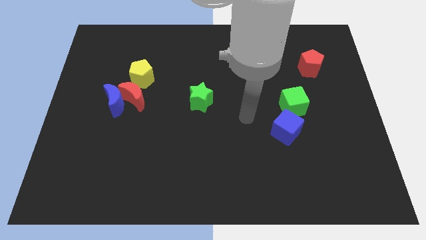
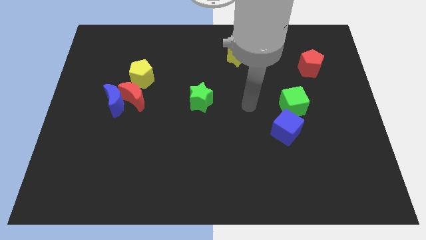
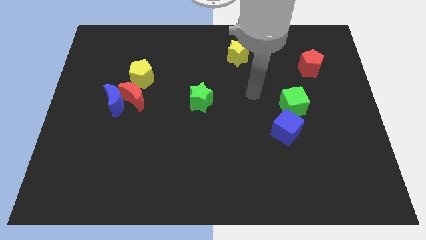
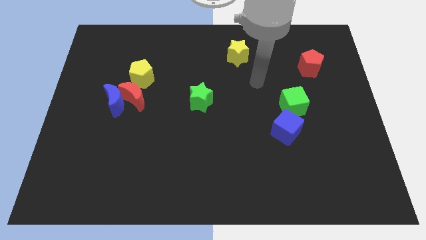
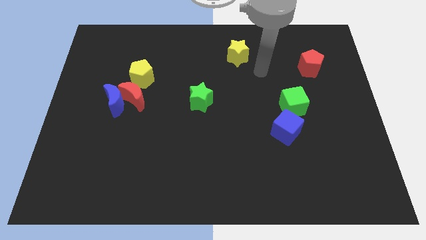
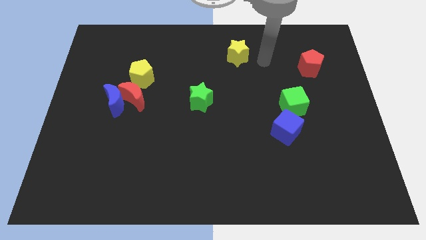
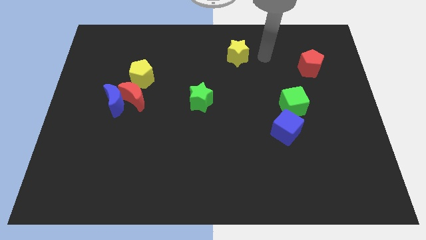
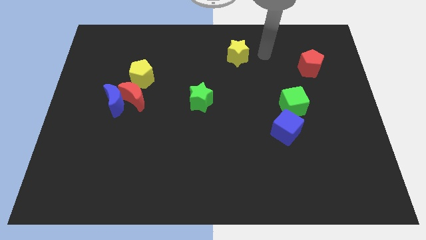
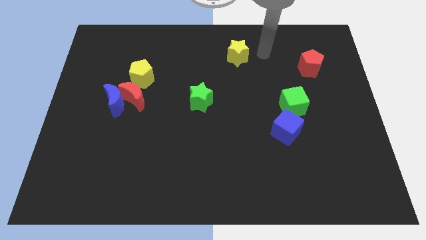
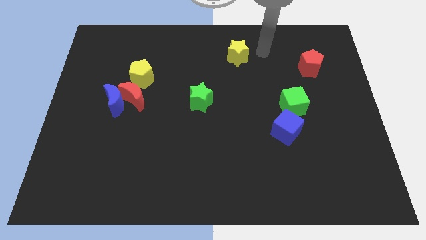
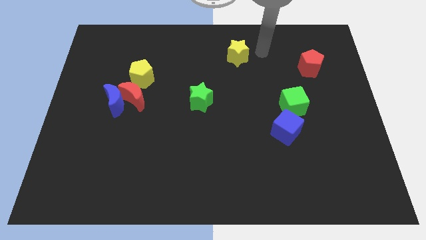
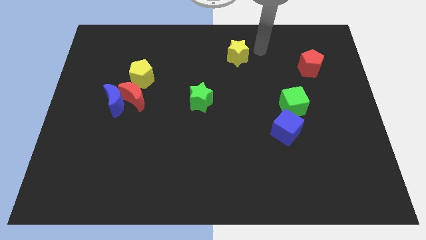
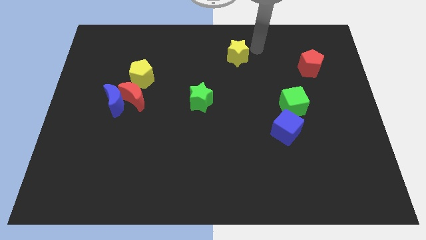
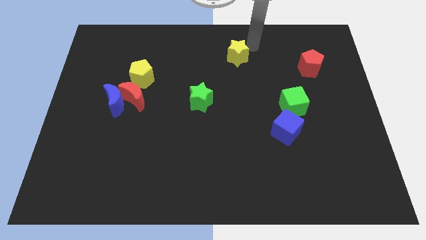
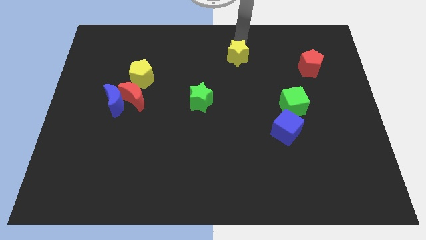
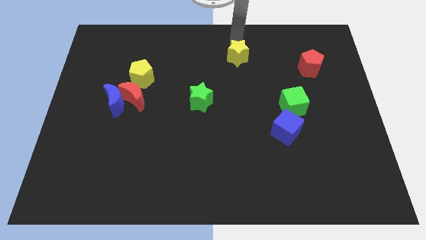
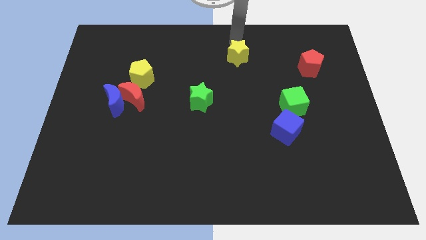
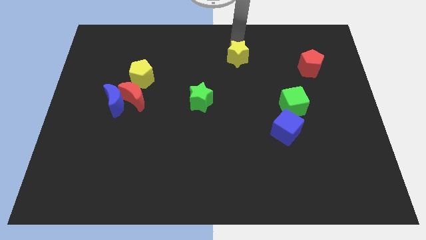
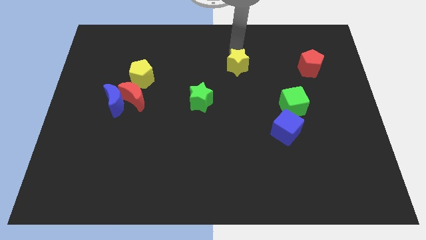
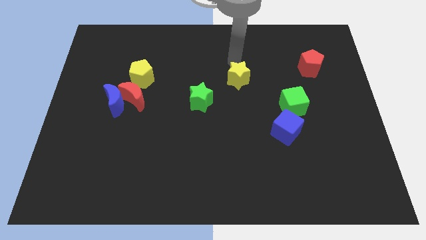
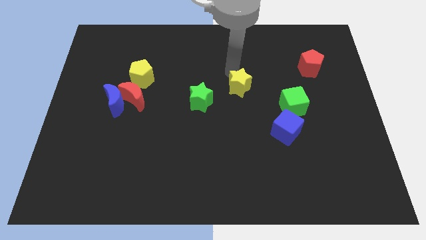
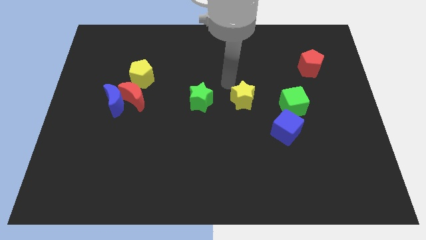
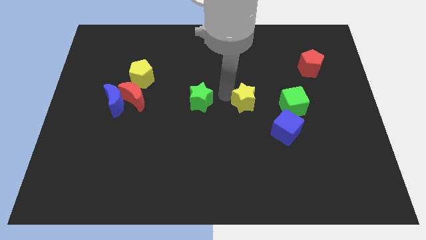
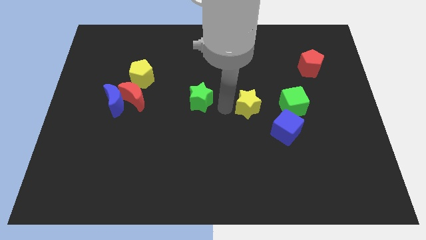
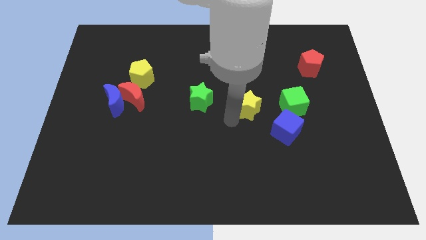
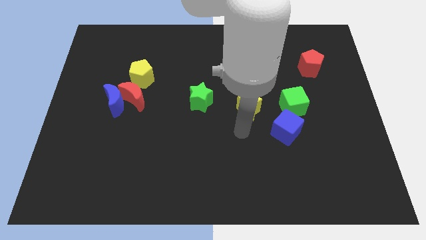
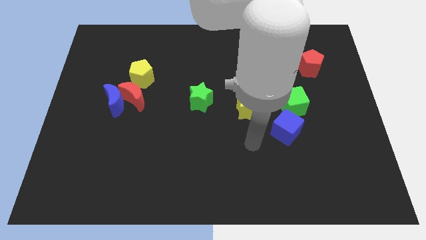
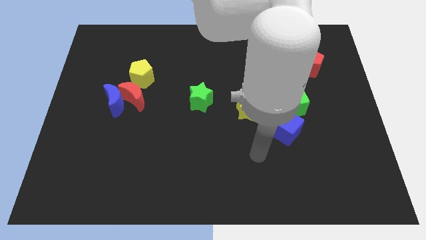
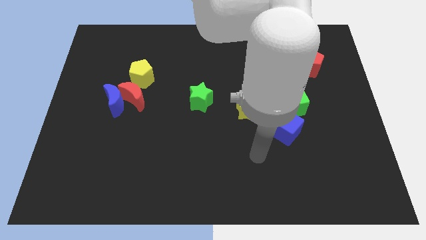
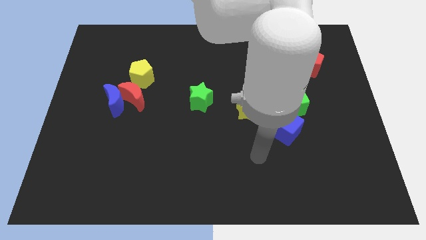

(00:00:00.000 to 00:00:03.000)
slide the yellow star to the bottom right of green star

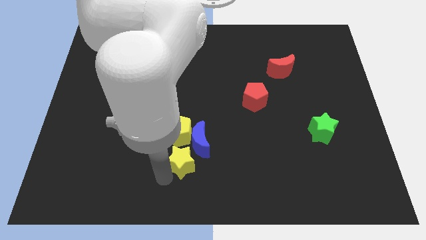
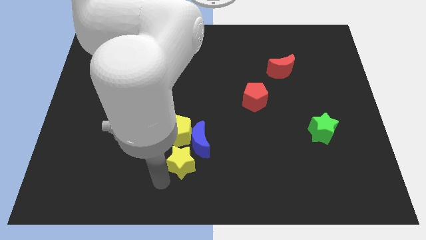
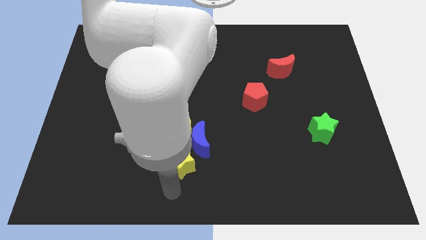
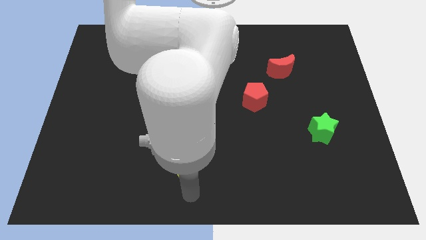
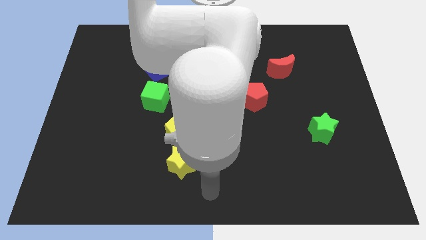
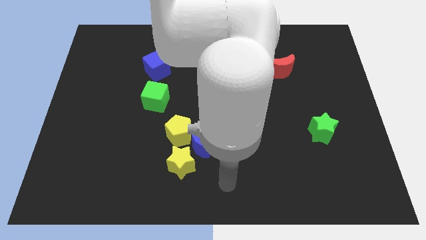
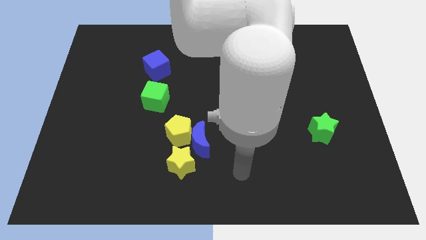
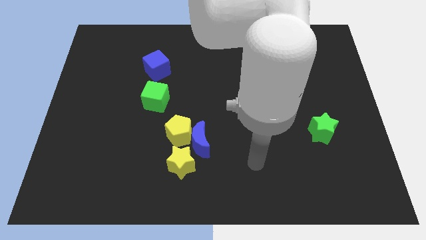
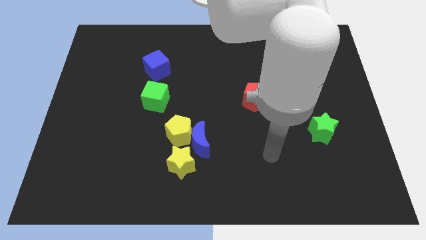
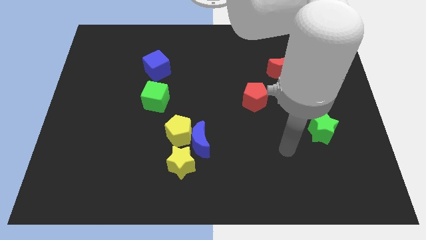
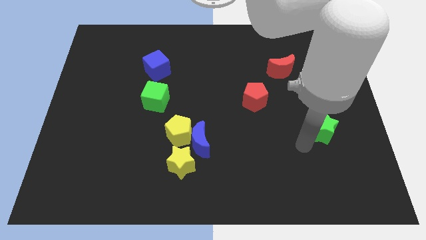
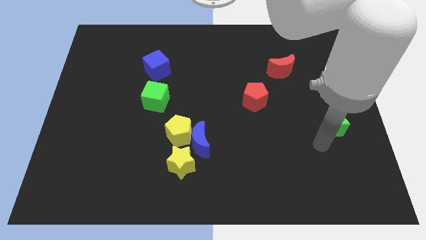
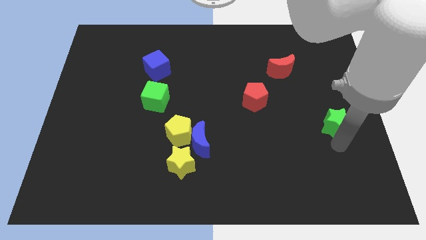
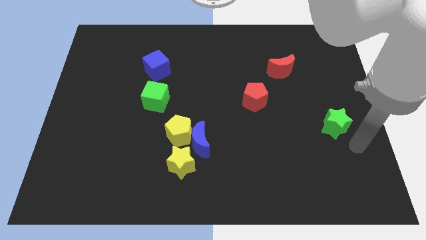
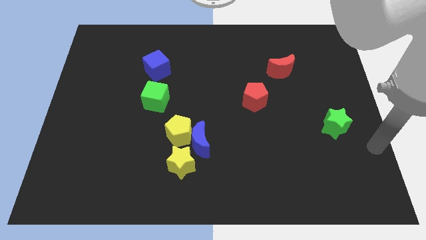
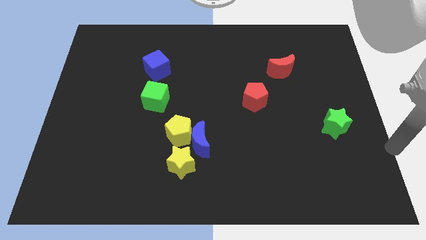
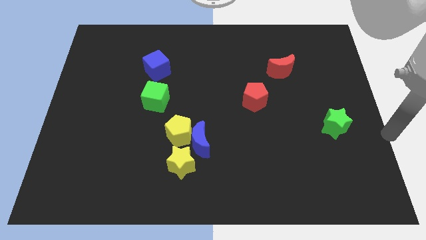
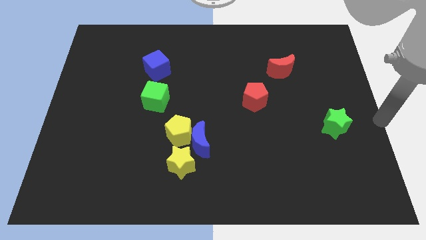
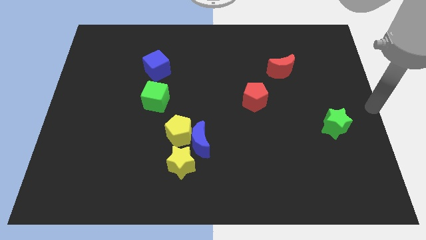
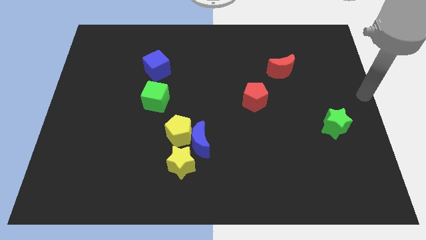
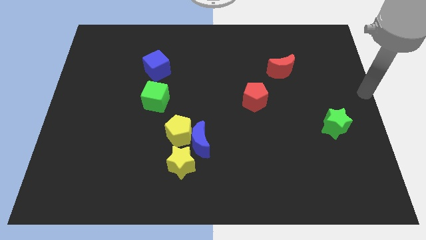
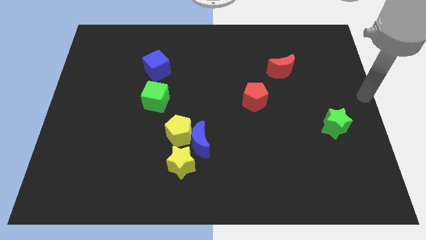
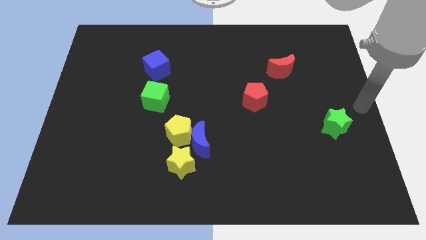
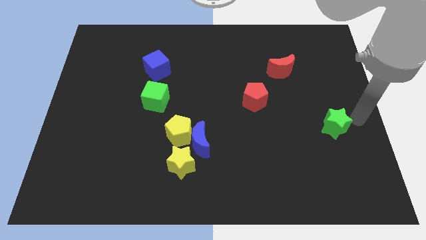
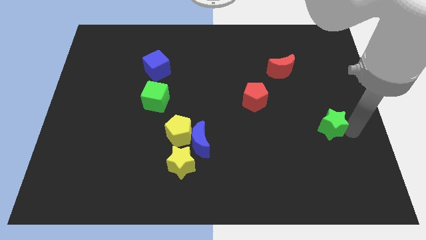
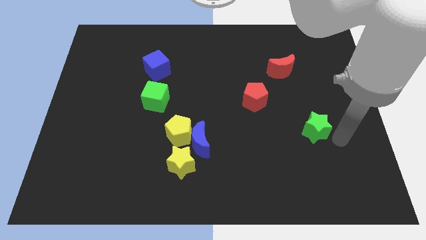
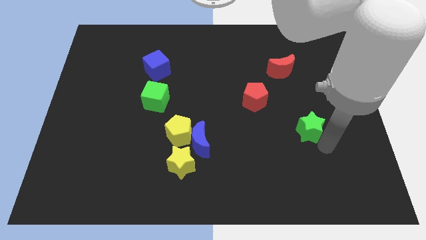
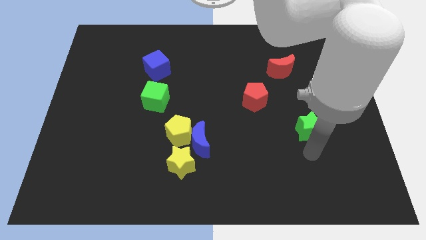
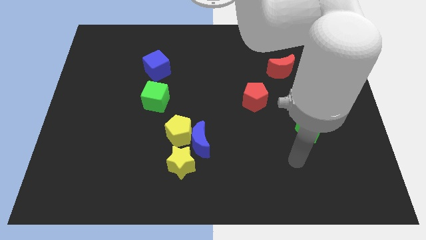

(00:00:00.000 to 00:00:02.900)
slide the green star slightly to the left

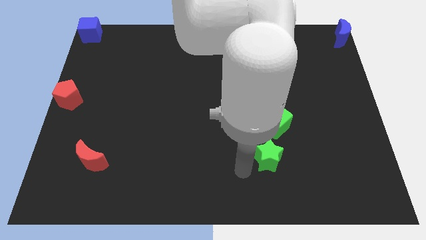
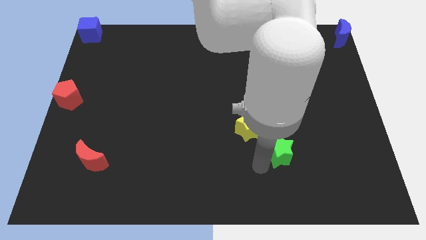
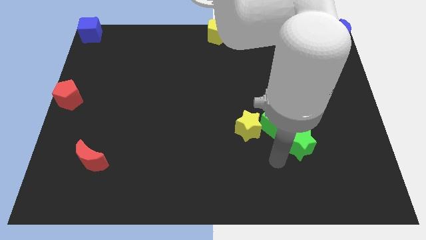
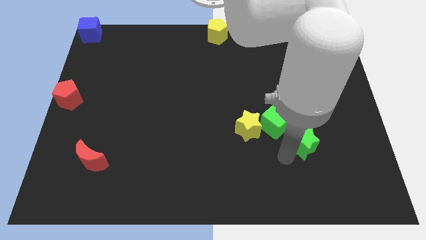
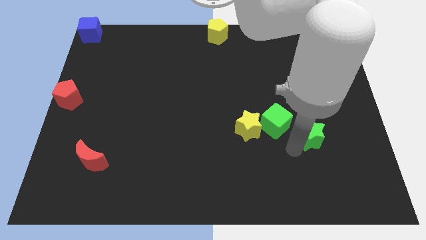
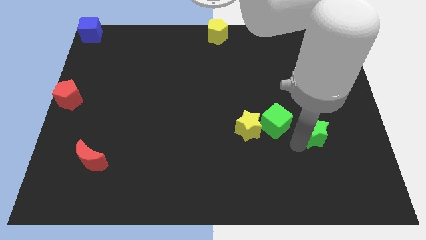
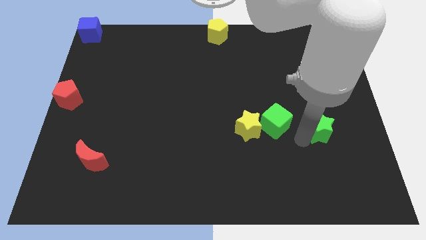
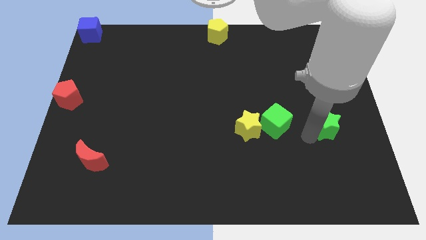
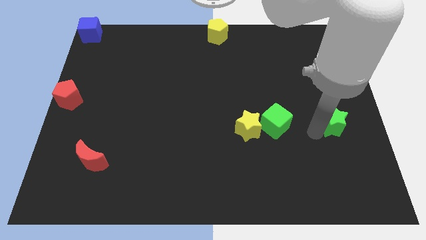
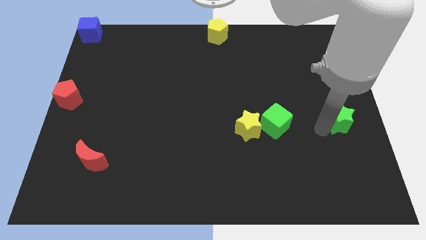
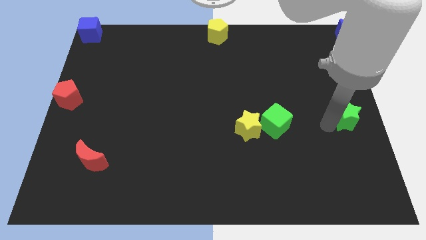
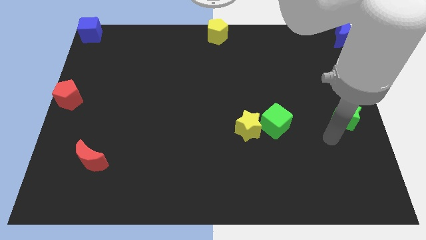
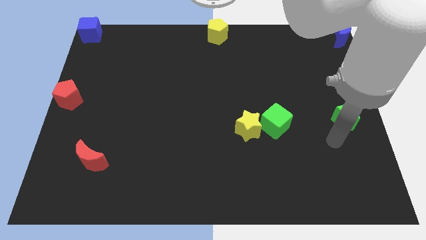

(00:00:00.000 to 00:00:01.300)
move the green star to the right center of the board

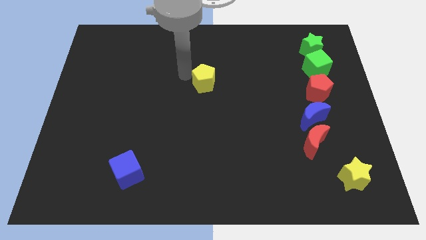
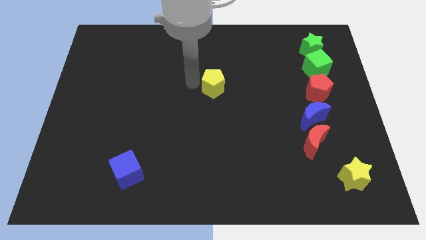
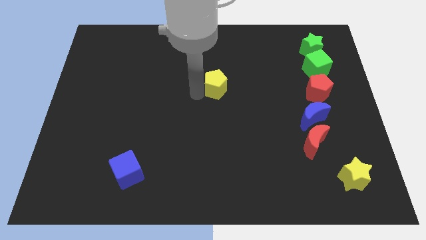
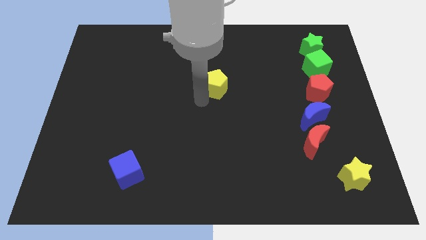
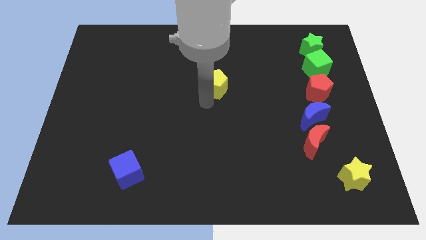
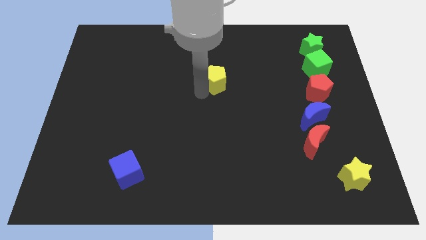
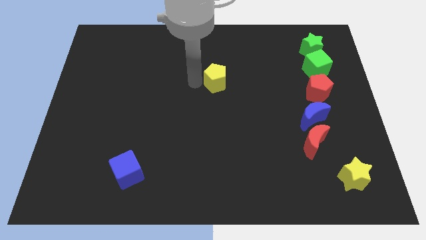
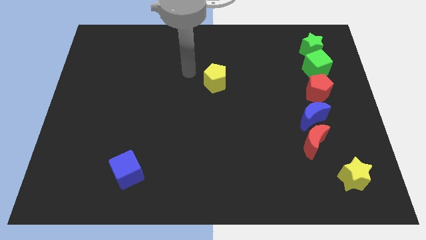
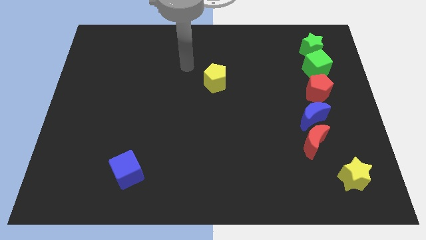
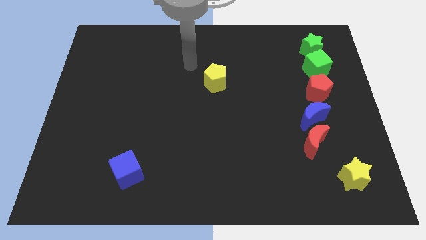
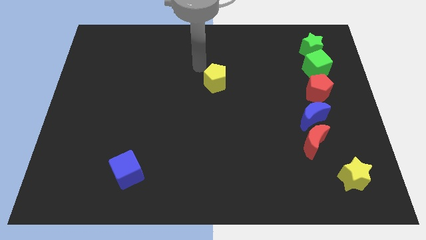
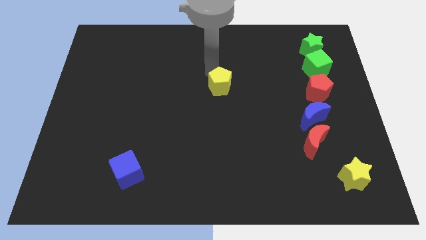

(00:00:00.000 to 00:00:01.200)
move the yellow pentagon to the center of the baord

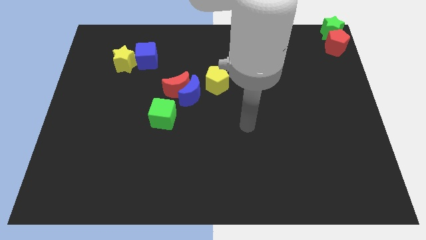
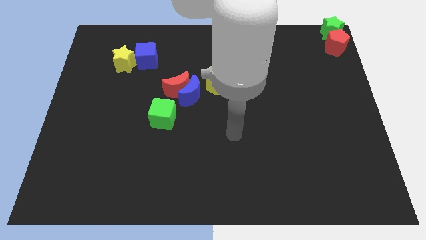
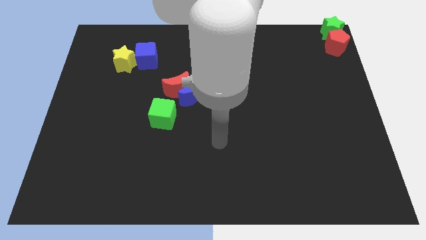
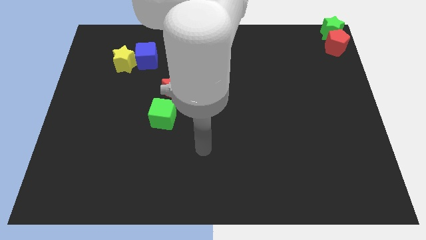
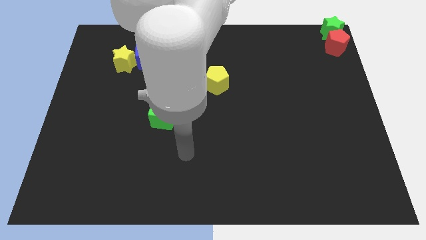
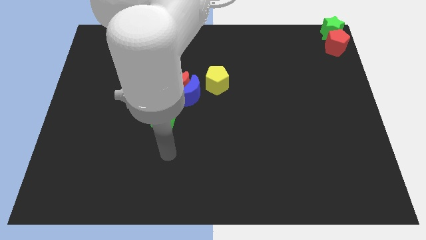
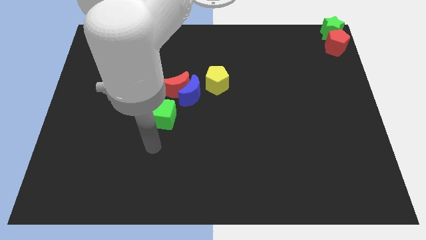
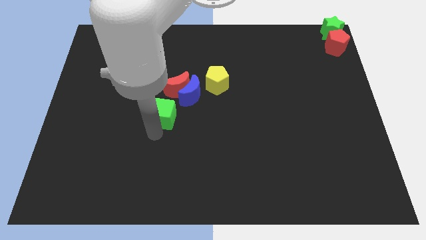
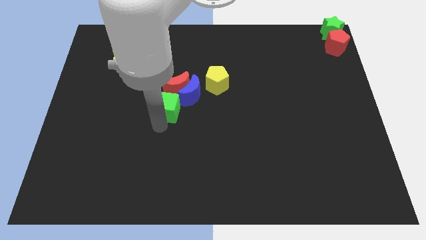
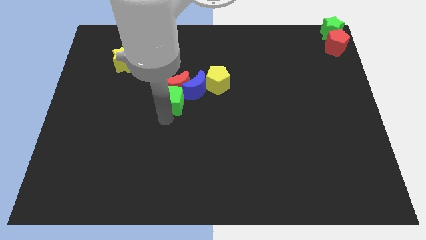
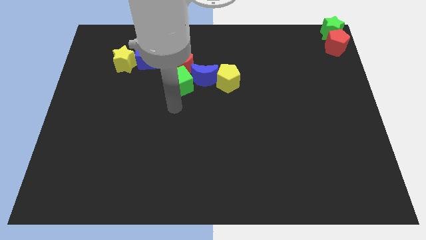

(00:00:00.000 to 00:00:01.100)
push the green cube into the red crescent
